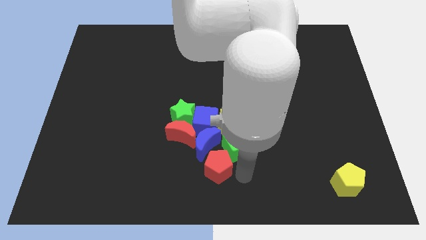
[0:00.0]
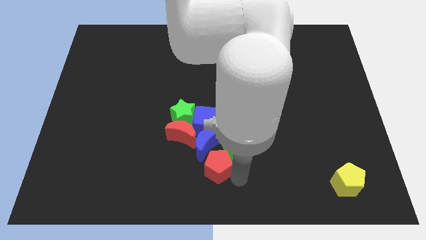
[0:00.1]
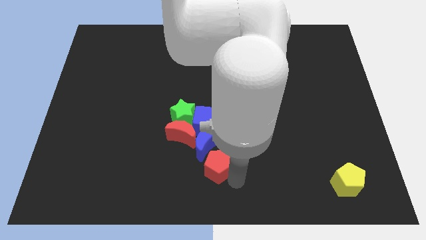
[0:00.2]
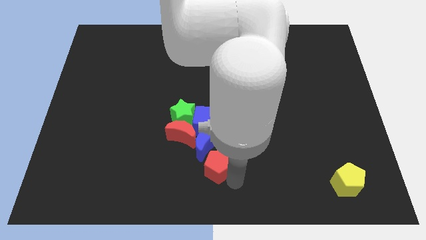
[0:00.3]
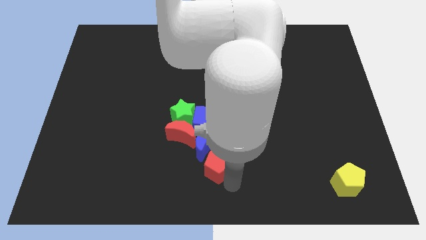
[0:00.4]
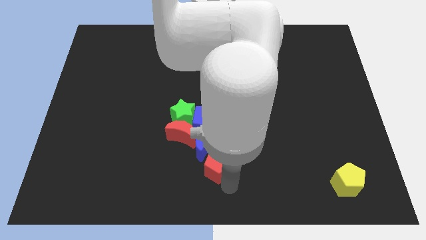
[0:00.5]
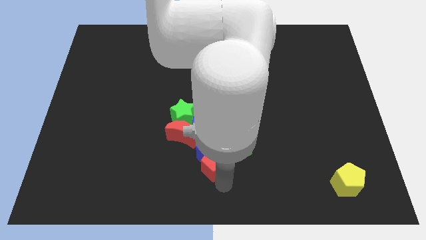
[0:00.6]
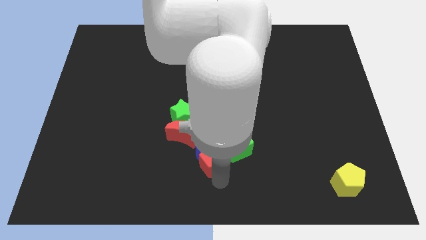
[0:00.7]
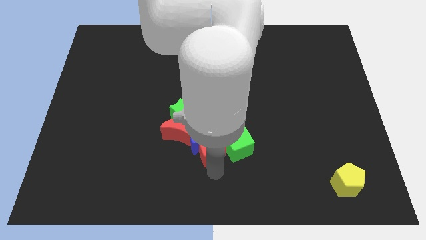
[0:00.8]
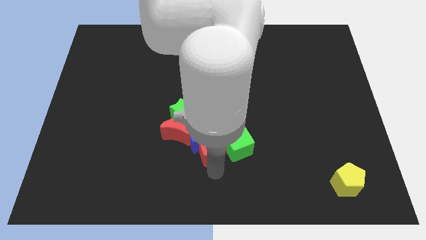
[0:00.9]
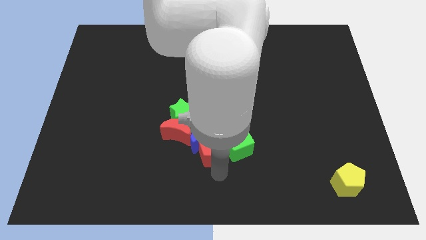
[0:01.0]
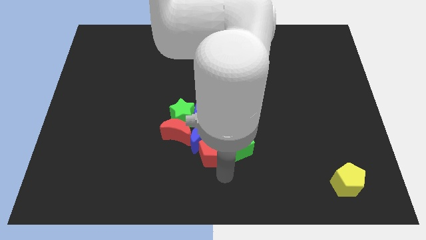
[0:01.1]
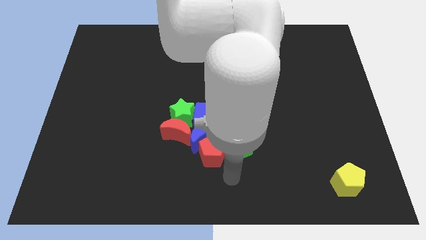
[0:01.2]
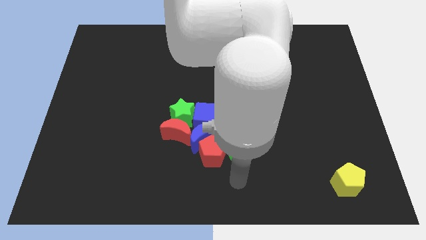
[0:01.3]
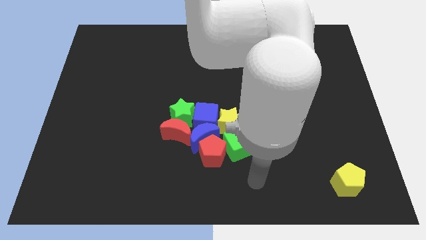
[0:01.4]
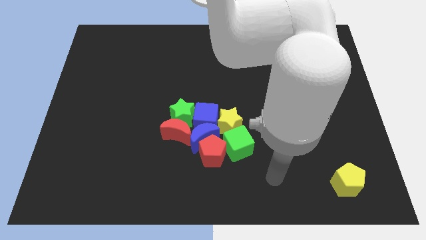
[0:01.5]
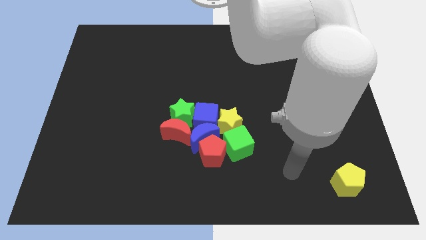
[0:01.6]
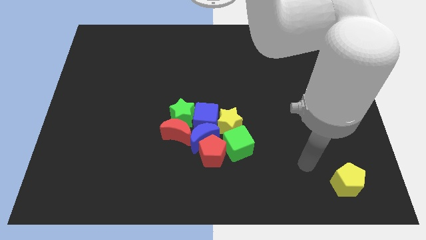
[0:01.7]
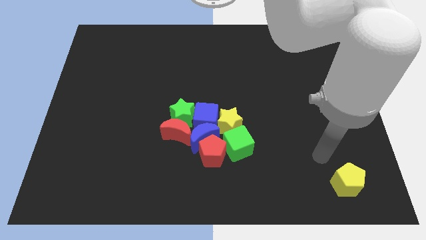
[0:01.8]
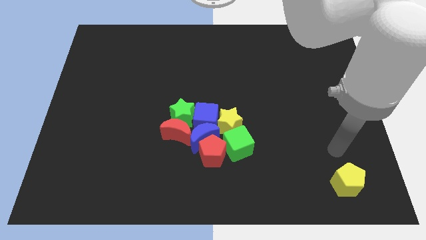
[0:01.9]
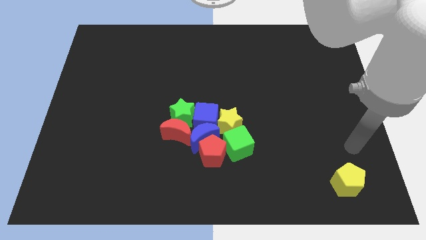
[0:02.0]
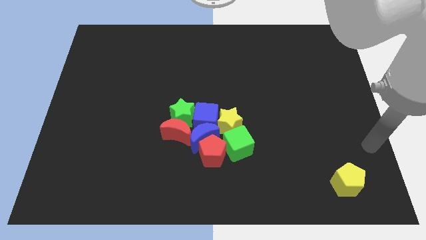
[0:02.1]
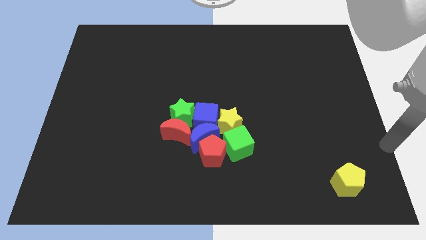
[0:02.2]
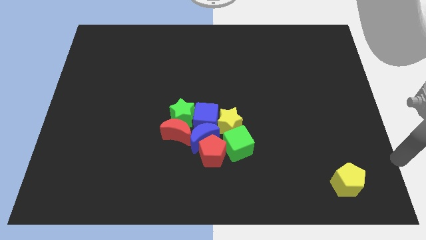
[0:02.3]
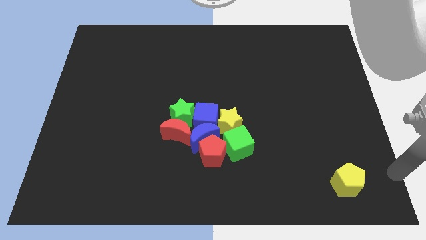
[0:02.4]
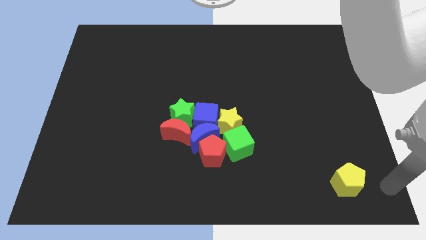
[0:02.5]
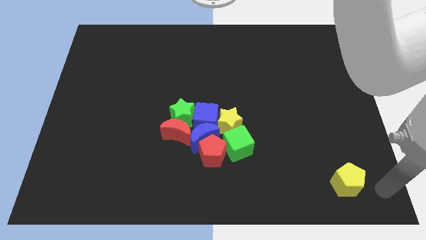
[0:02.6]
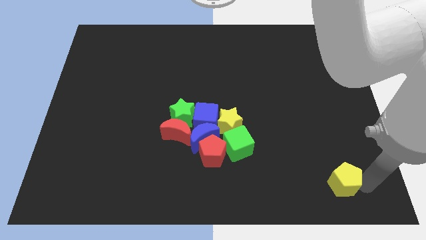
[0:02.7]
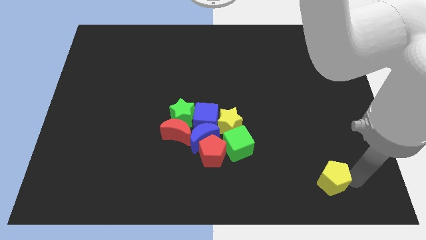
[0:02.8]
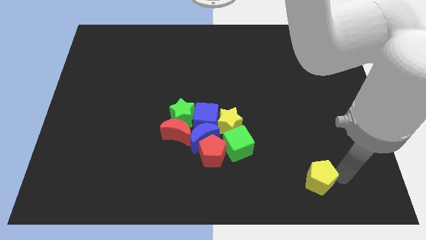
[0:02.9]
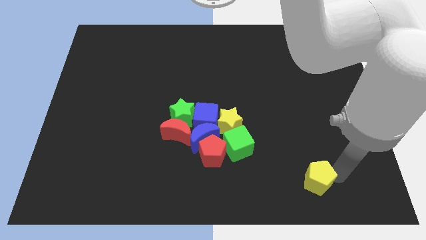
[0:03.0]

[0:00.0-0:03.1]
slightly push the yellow pentagon to the left

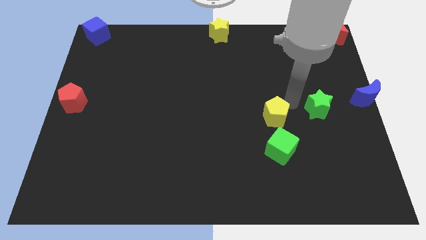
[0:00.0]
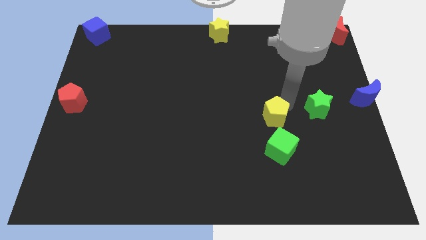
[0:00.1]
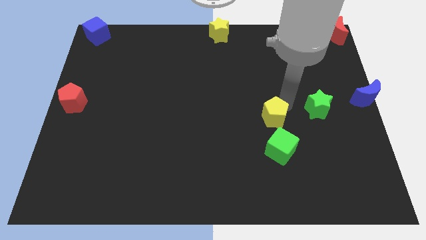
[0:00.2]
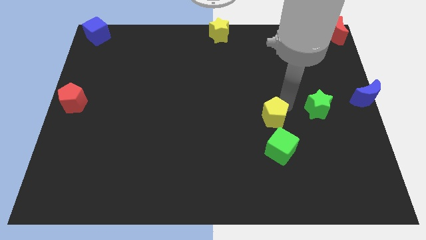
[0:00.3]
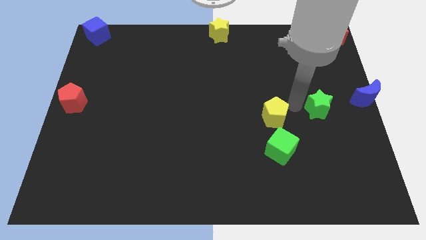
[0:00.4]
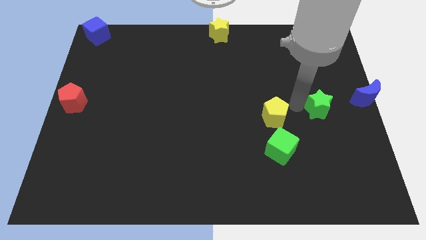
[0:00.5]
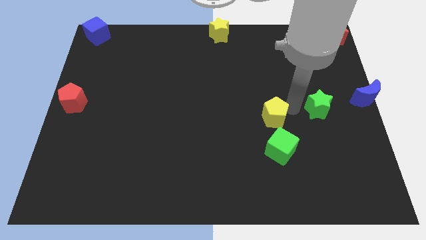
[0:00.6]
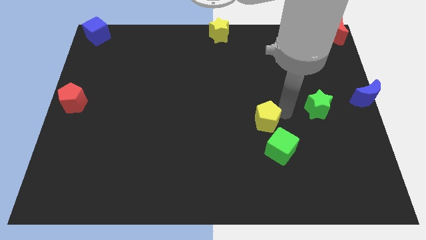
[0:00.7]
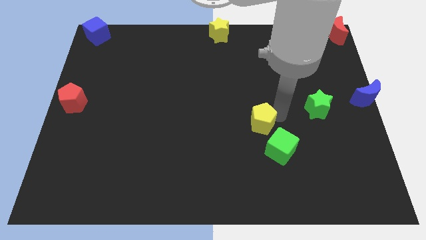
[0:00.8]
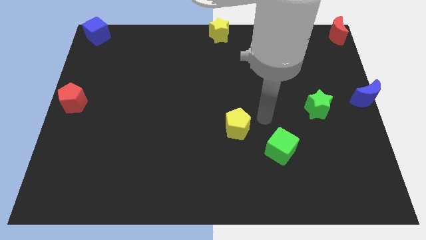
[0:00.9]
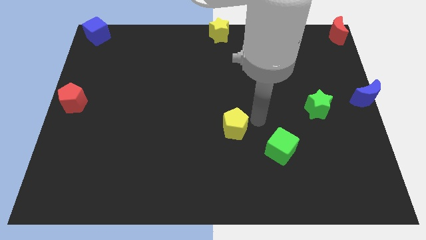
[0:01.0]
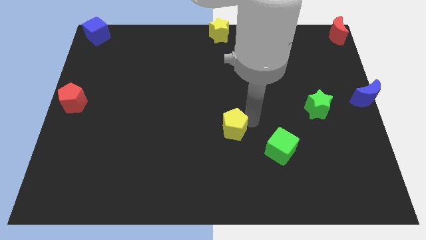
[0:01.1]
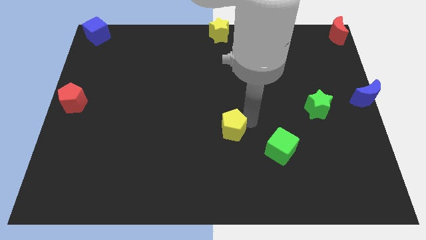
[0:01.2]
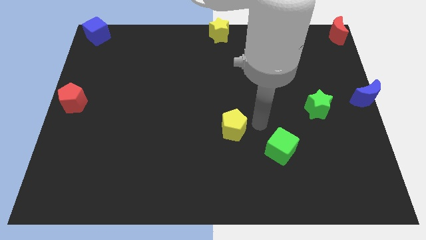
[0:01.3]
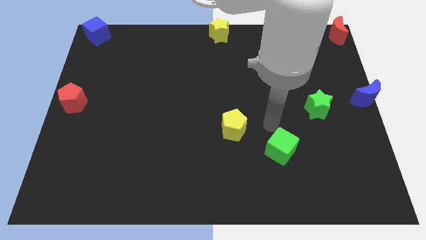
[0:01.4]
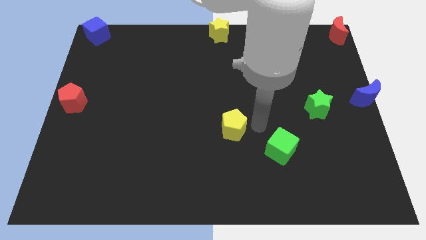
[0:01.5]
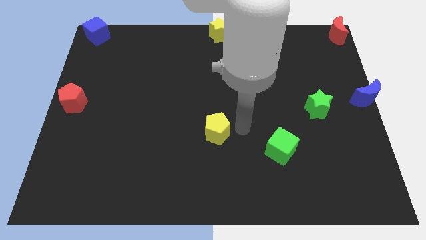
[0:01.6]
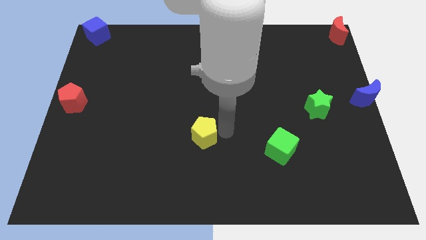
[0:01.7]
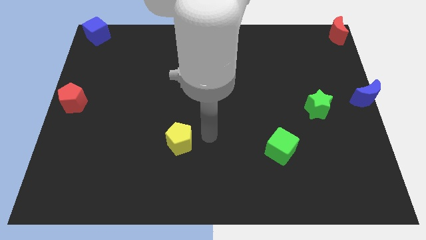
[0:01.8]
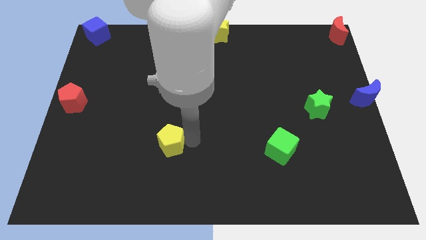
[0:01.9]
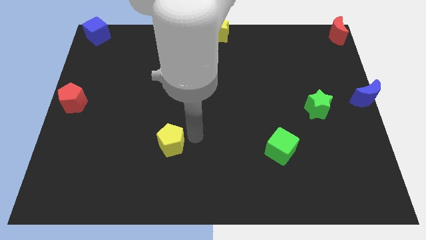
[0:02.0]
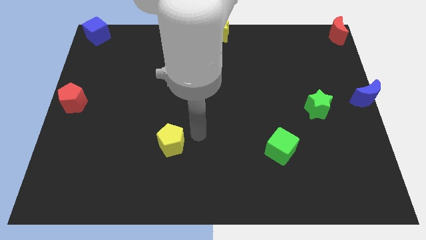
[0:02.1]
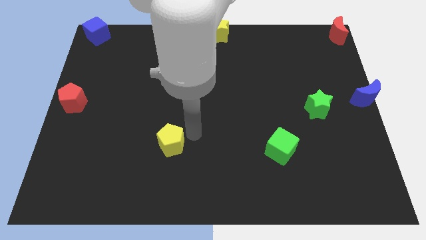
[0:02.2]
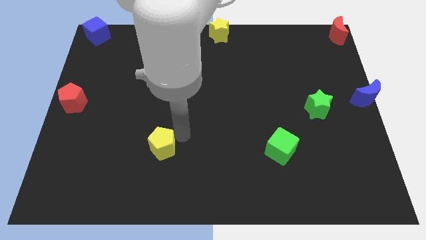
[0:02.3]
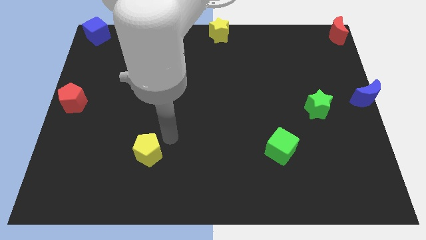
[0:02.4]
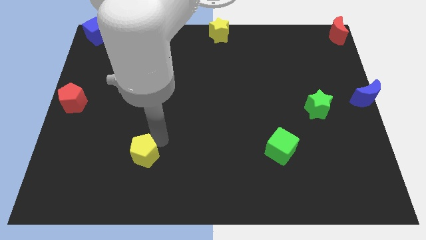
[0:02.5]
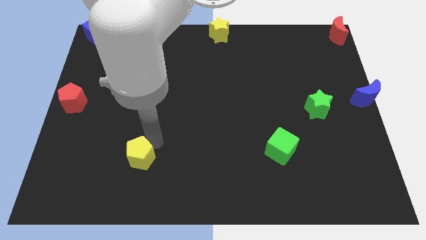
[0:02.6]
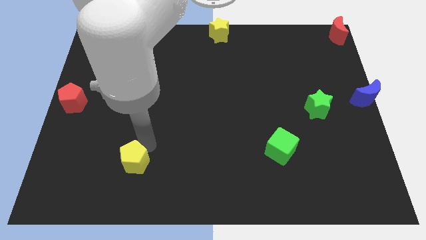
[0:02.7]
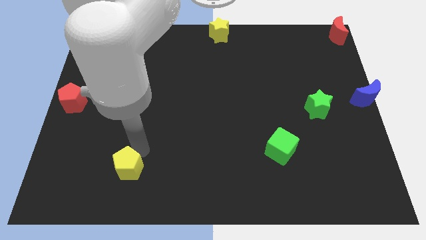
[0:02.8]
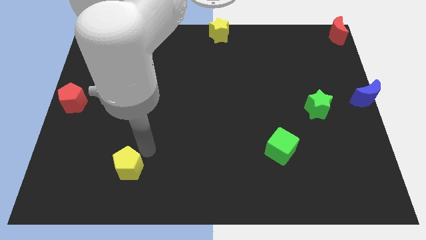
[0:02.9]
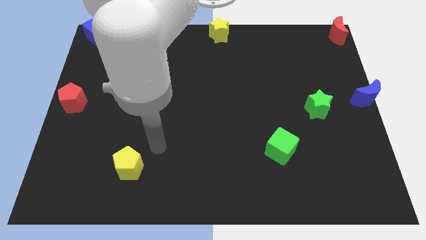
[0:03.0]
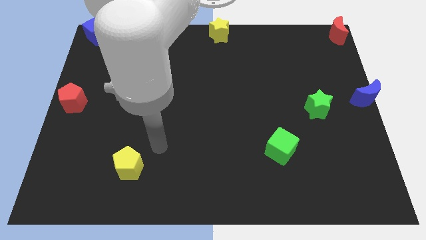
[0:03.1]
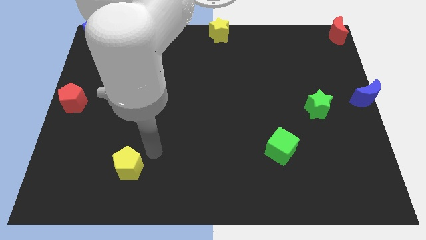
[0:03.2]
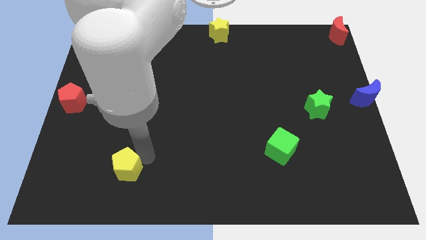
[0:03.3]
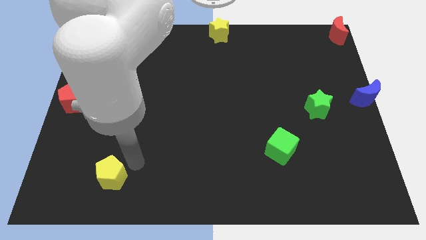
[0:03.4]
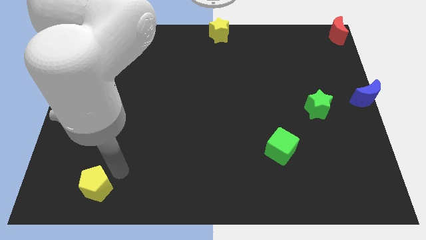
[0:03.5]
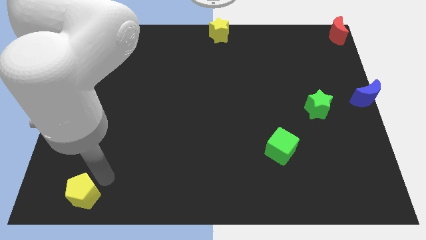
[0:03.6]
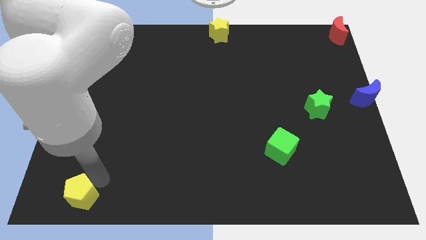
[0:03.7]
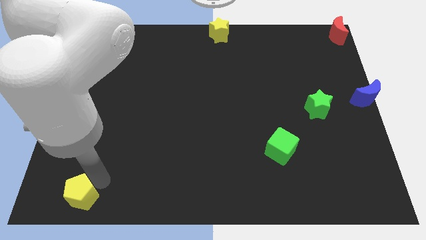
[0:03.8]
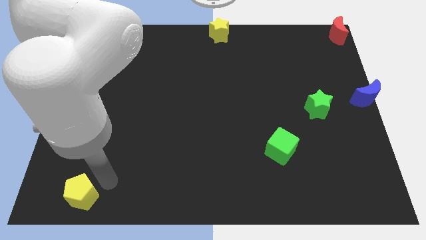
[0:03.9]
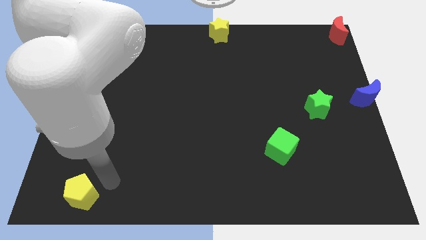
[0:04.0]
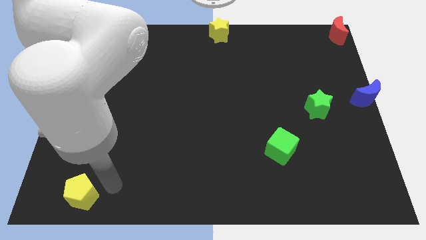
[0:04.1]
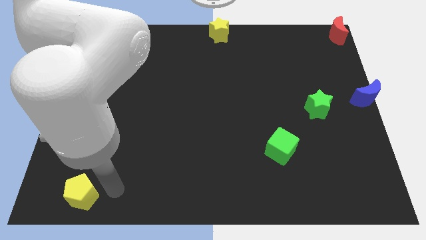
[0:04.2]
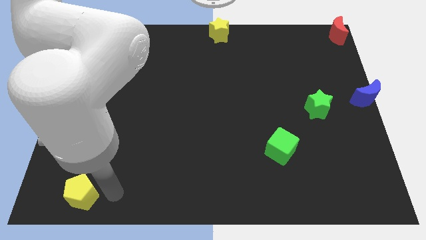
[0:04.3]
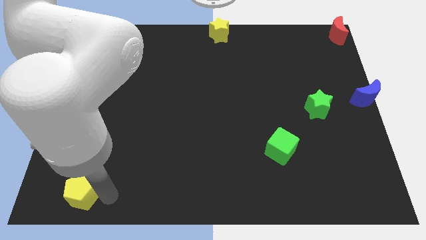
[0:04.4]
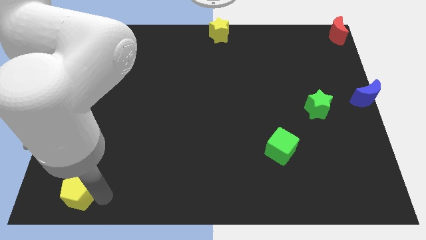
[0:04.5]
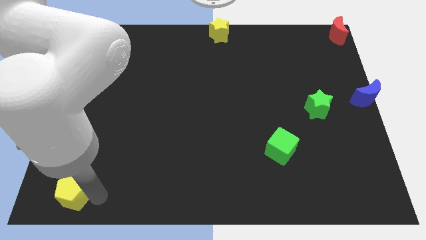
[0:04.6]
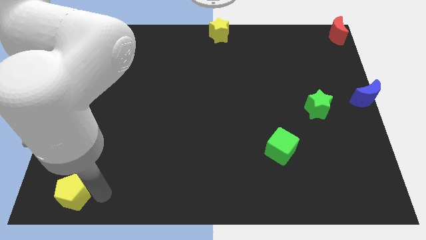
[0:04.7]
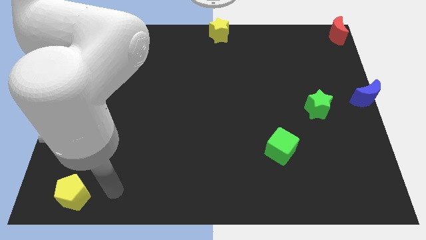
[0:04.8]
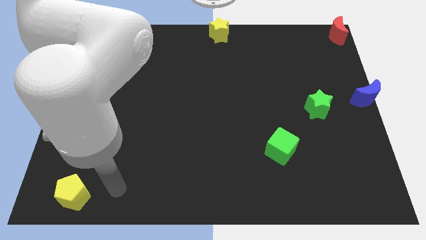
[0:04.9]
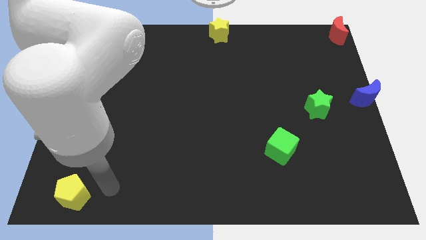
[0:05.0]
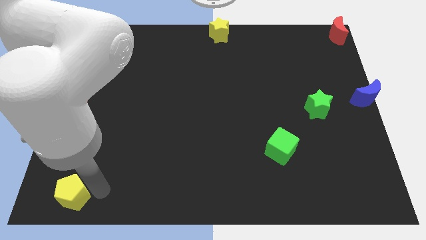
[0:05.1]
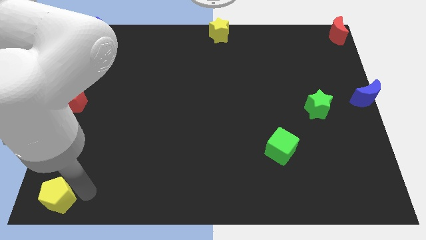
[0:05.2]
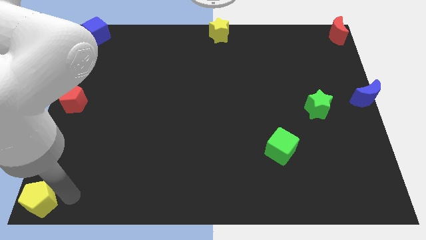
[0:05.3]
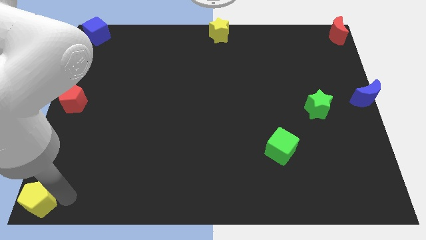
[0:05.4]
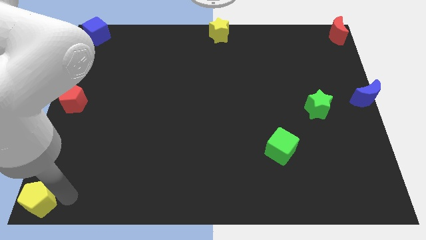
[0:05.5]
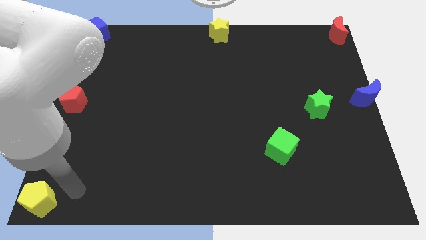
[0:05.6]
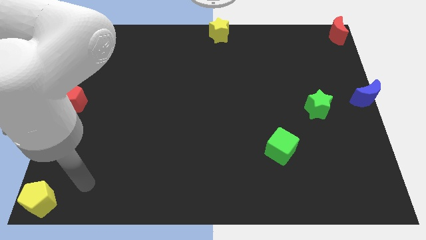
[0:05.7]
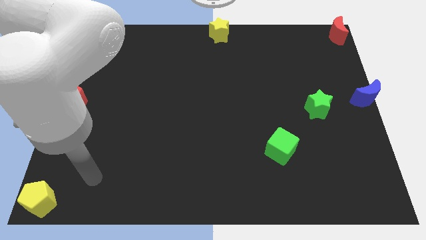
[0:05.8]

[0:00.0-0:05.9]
push the yellow pentagon to the bottom left of the board
